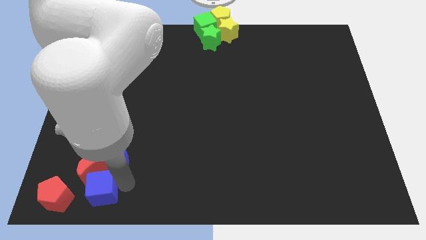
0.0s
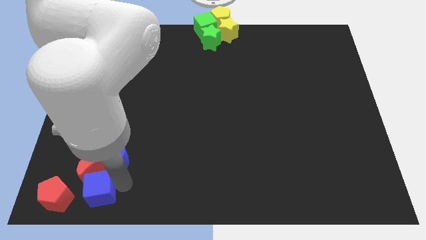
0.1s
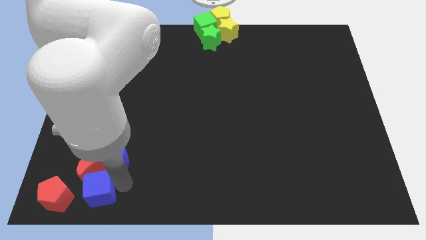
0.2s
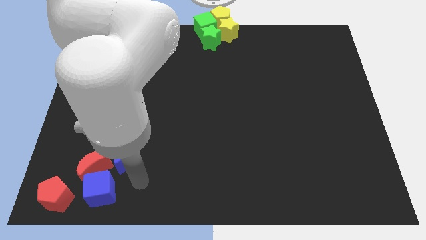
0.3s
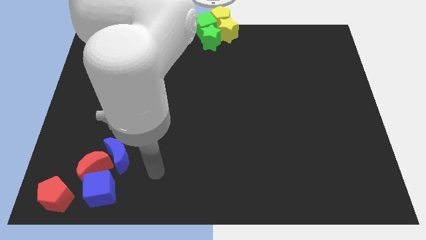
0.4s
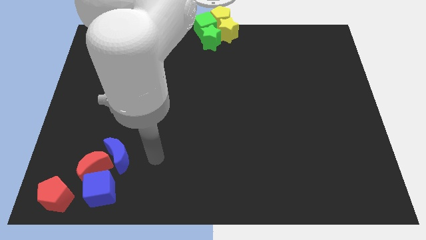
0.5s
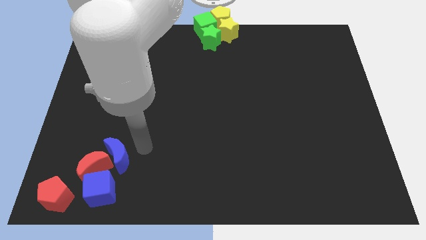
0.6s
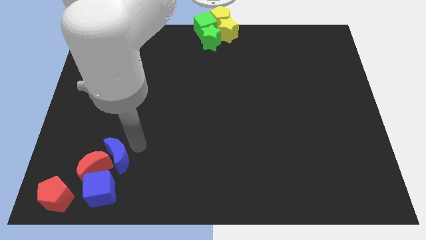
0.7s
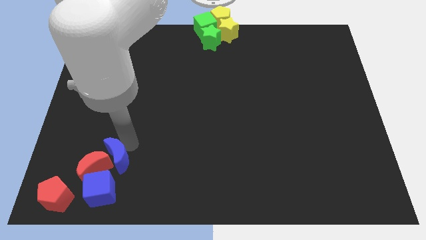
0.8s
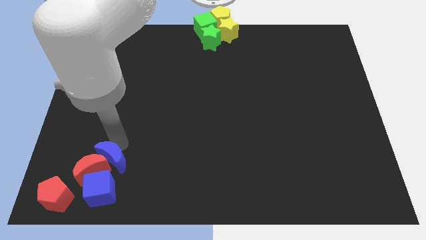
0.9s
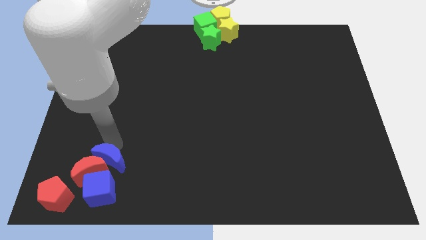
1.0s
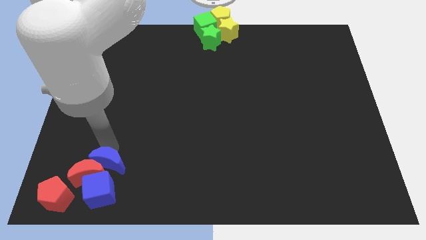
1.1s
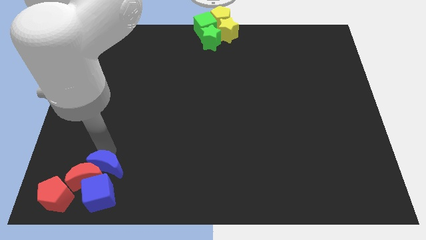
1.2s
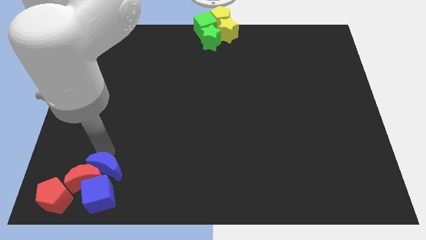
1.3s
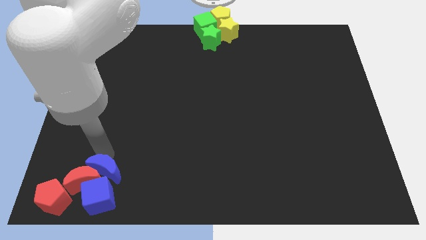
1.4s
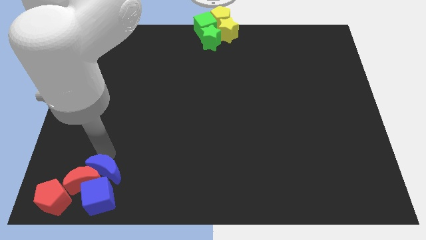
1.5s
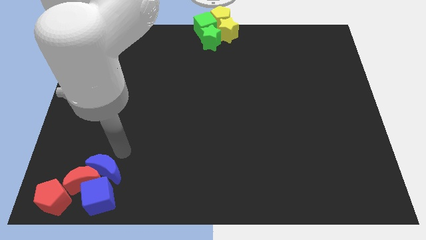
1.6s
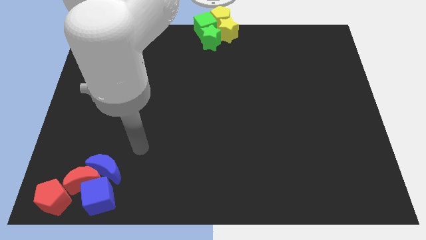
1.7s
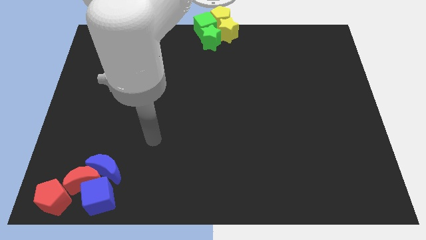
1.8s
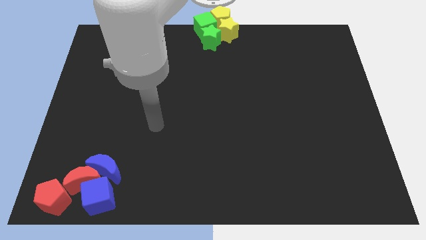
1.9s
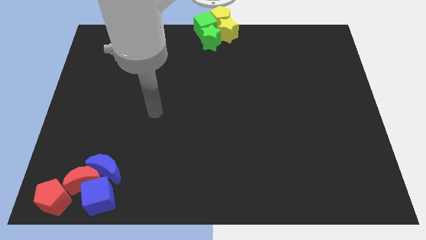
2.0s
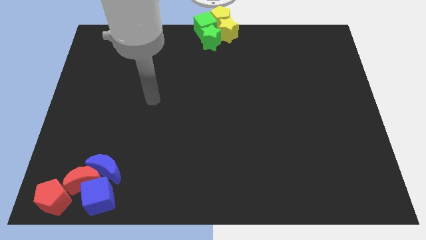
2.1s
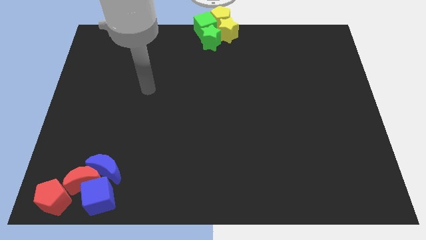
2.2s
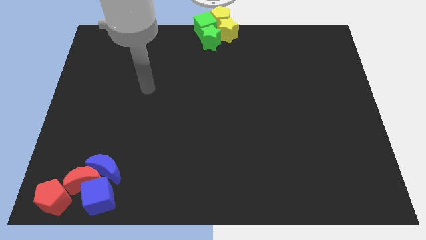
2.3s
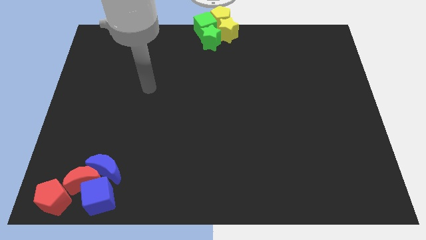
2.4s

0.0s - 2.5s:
make group of red and blue blocks

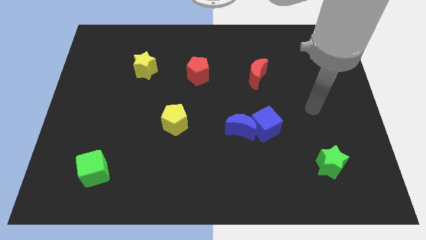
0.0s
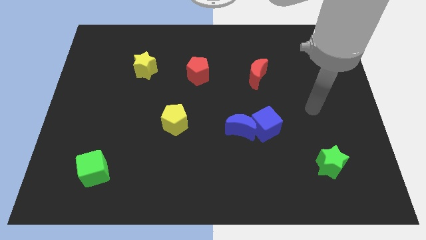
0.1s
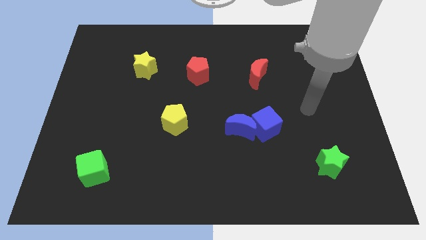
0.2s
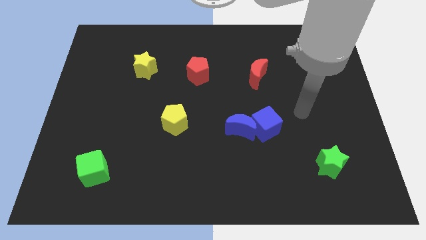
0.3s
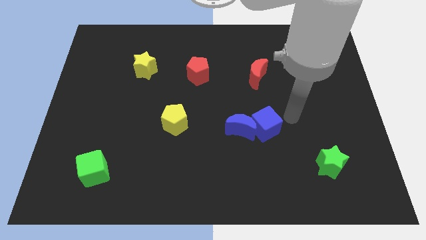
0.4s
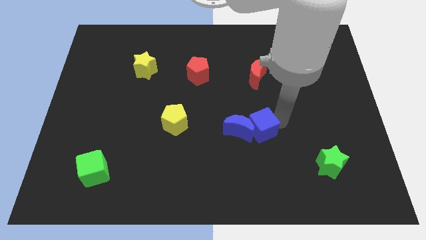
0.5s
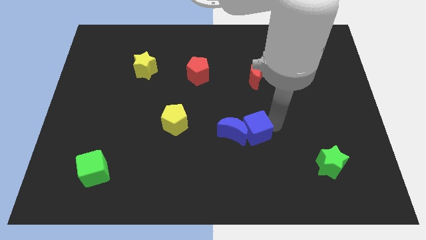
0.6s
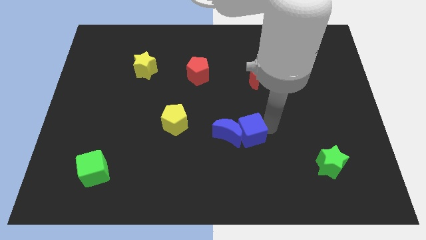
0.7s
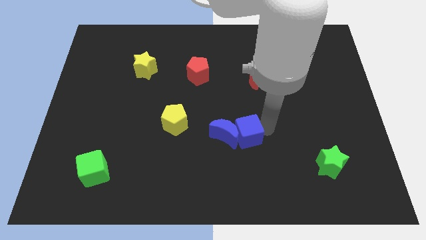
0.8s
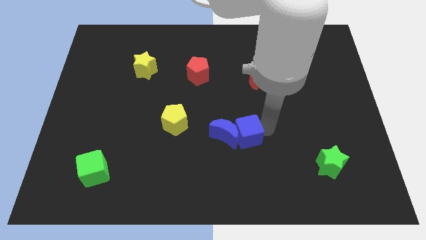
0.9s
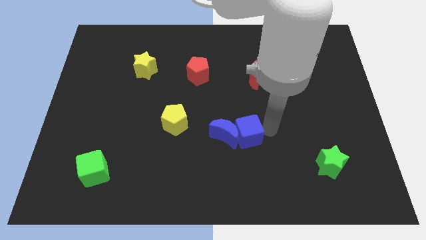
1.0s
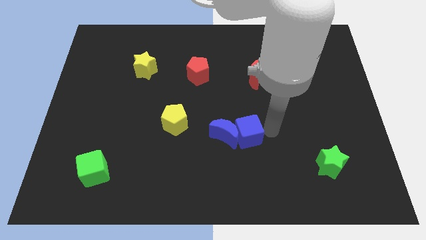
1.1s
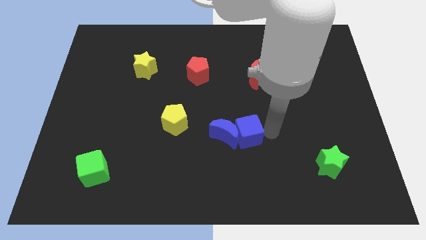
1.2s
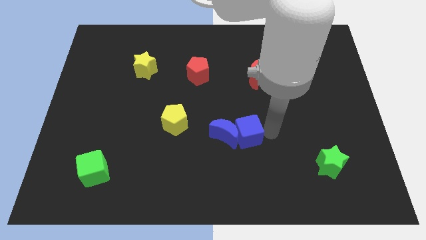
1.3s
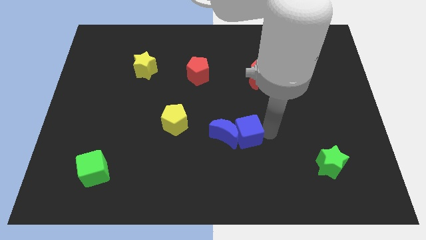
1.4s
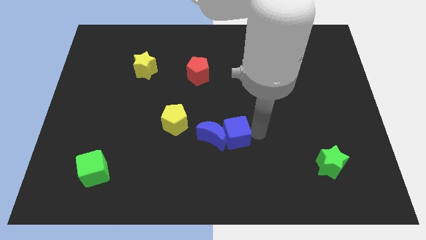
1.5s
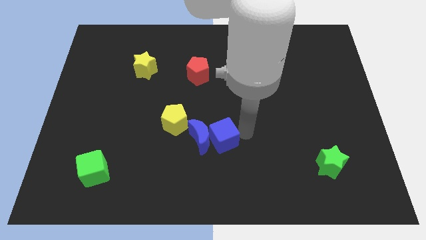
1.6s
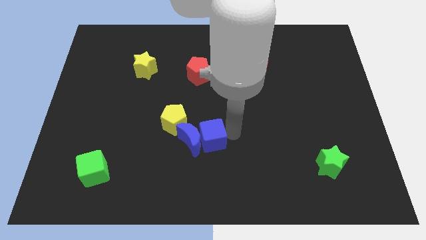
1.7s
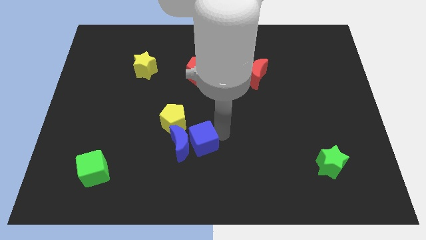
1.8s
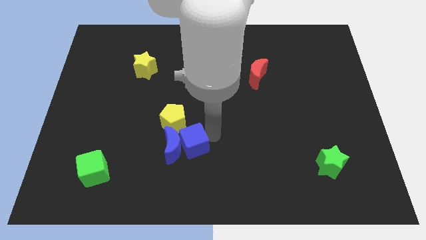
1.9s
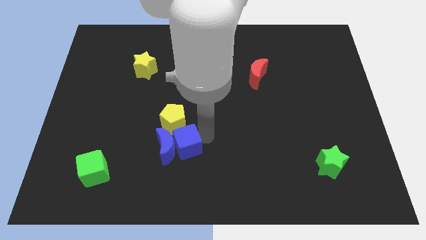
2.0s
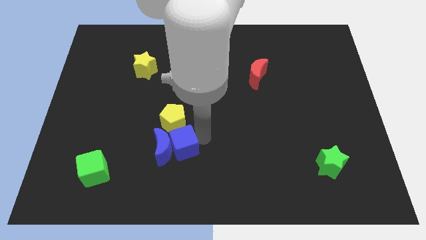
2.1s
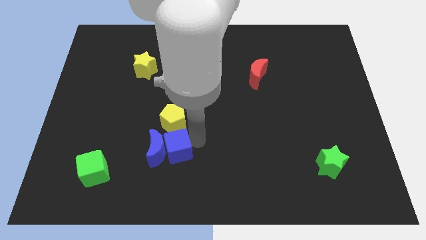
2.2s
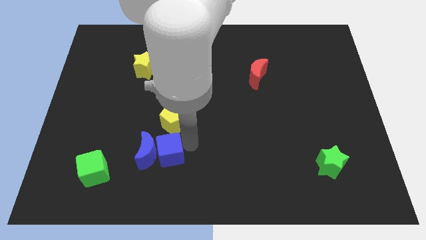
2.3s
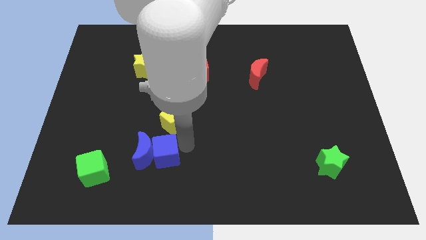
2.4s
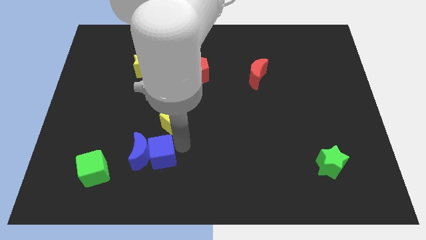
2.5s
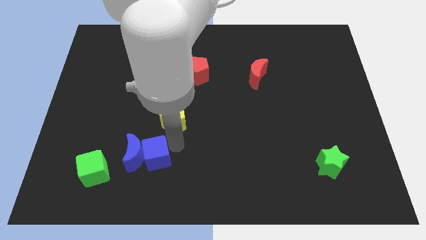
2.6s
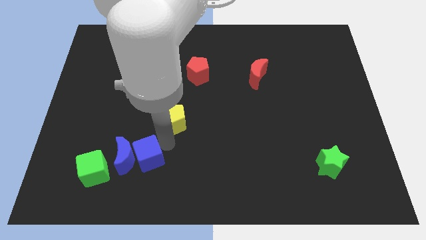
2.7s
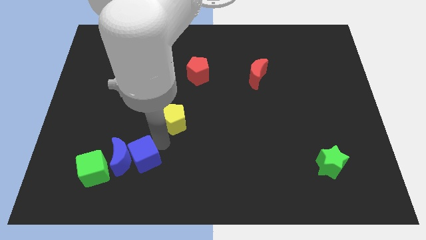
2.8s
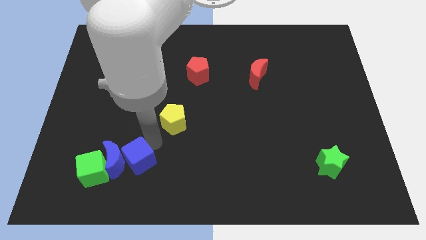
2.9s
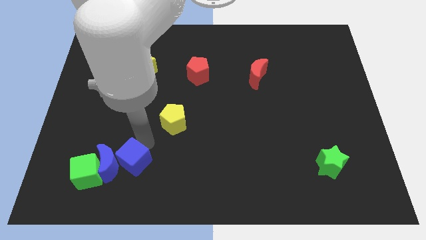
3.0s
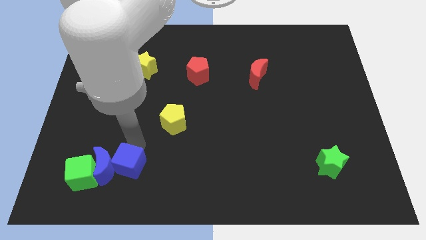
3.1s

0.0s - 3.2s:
drag the blue blocks into the green cube

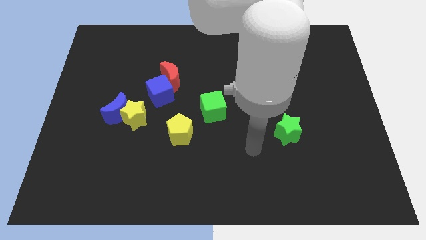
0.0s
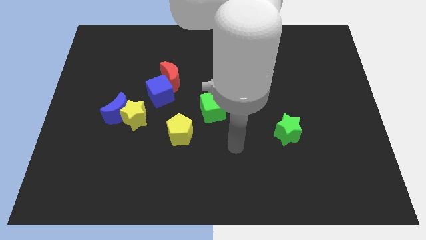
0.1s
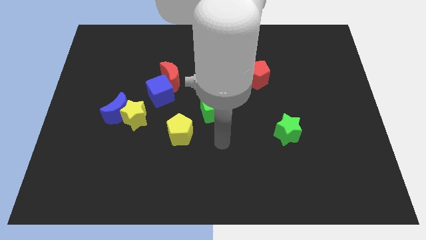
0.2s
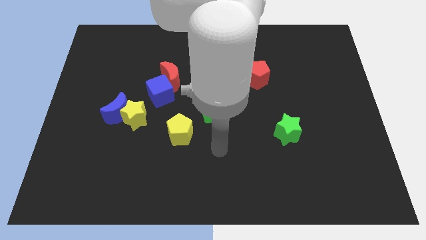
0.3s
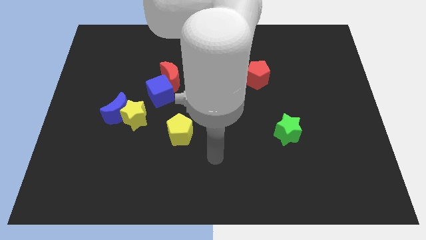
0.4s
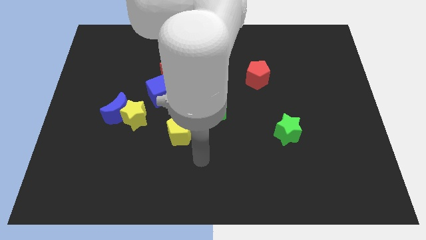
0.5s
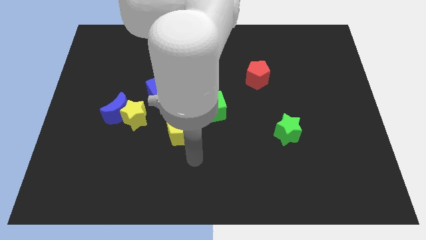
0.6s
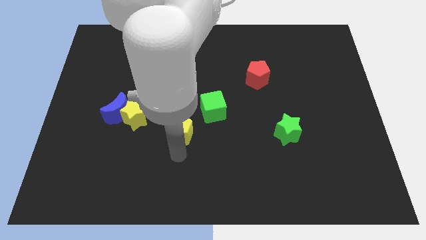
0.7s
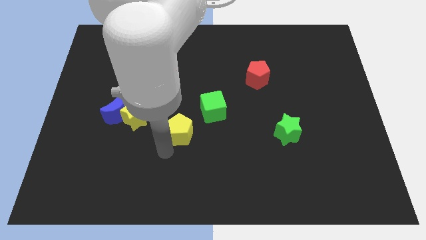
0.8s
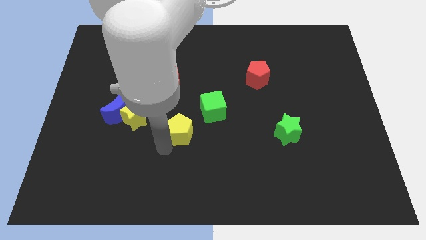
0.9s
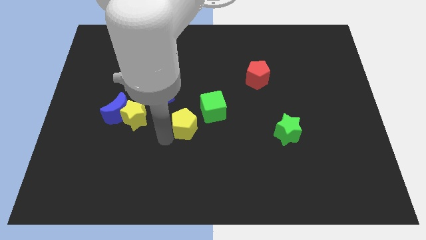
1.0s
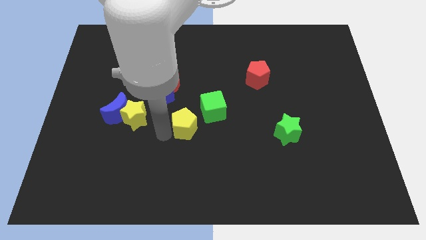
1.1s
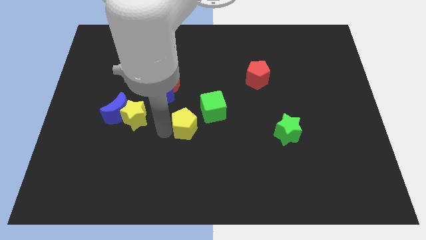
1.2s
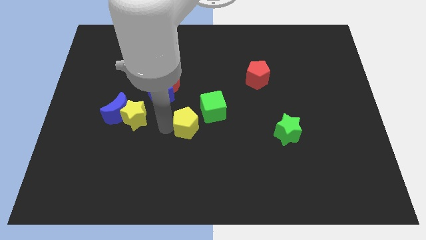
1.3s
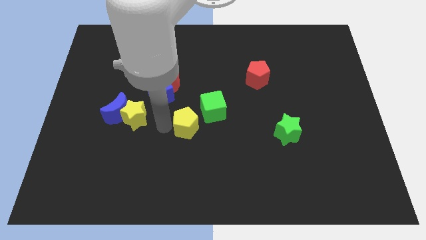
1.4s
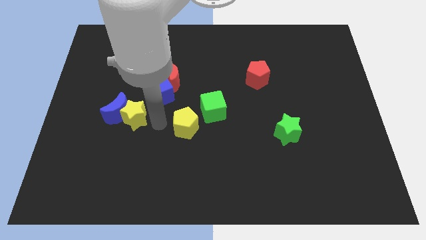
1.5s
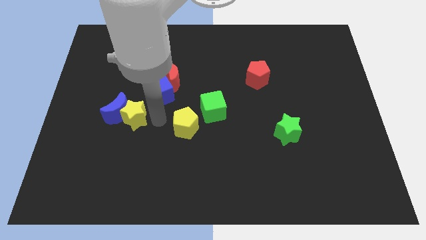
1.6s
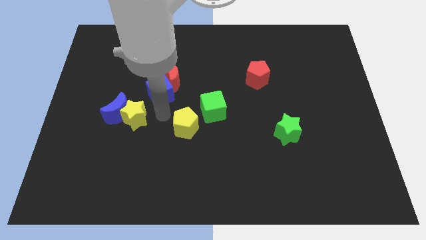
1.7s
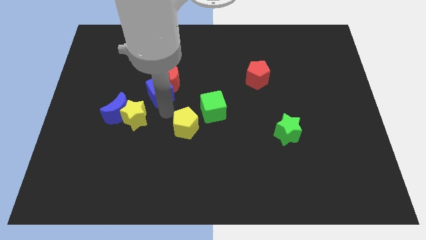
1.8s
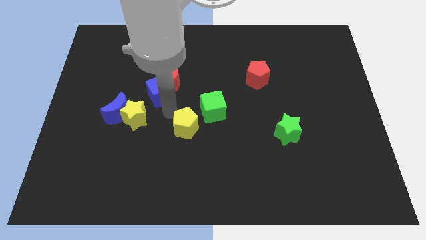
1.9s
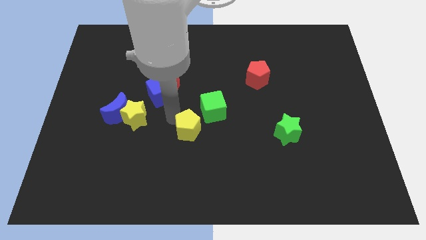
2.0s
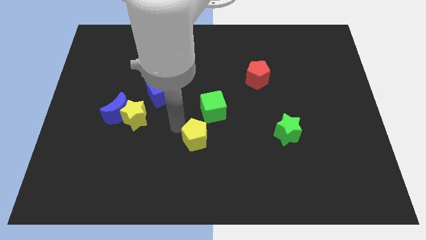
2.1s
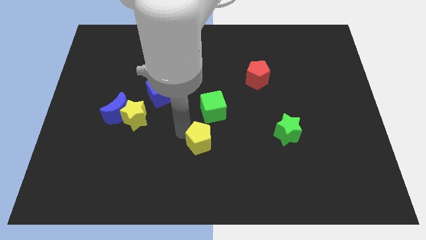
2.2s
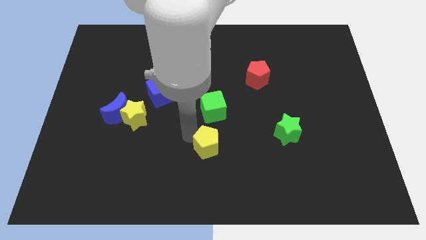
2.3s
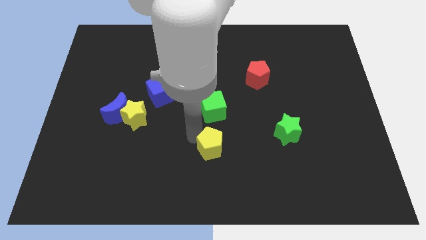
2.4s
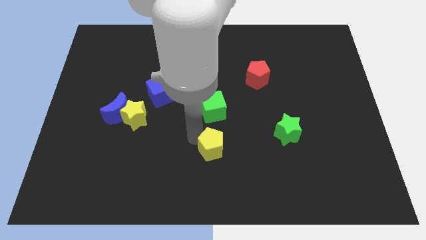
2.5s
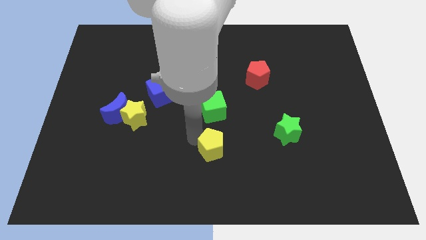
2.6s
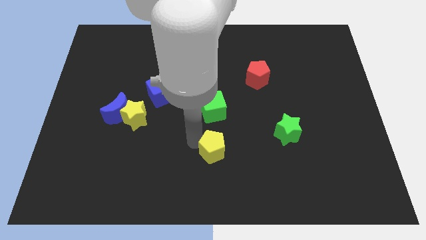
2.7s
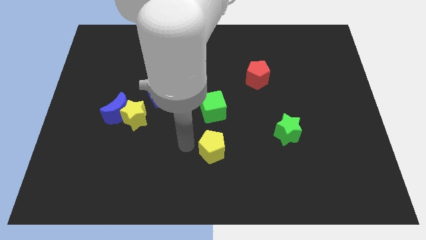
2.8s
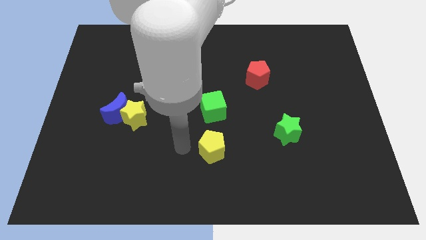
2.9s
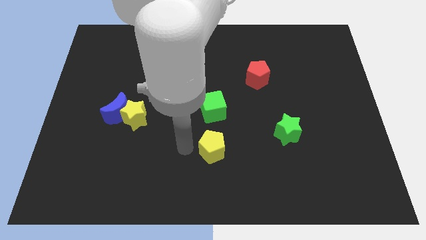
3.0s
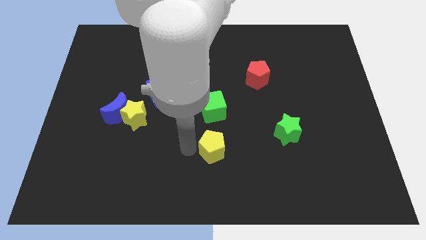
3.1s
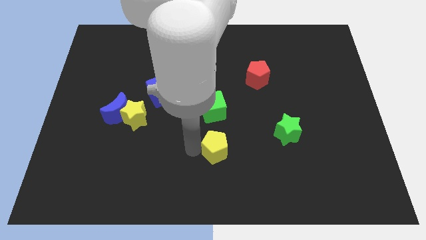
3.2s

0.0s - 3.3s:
place the yellow pentagon below the green cube
